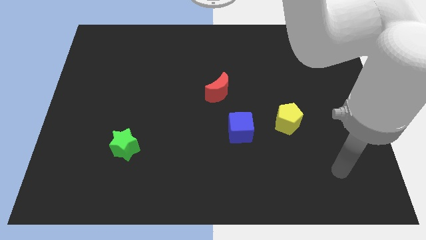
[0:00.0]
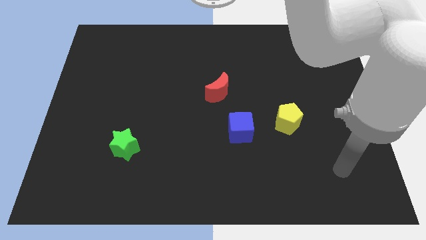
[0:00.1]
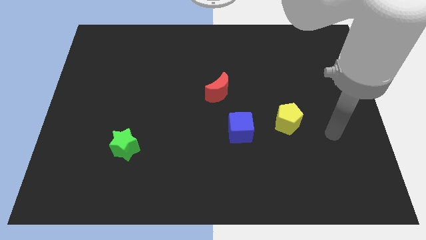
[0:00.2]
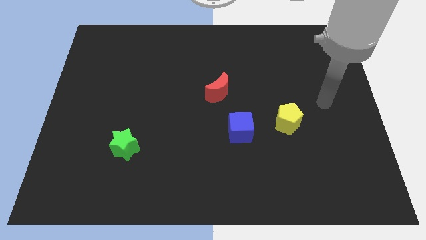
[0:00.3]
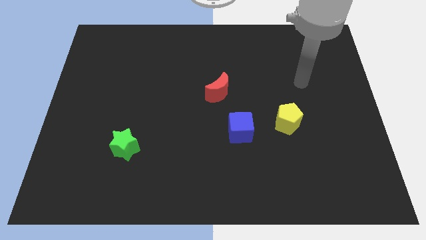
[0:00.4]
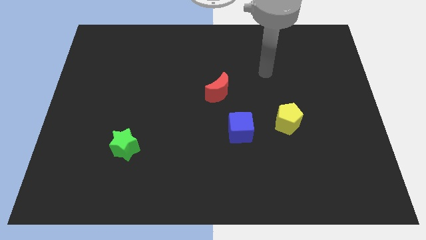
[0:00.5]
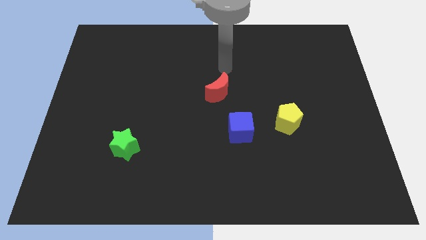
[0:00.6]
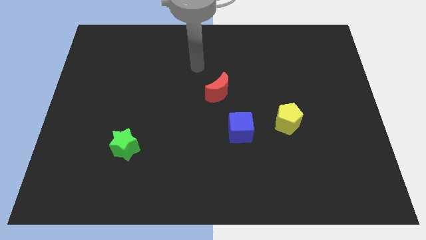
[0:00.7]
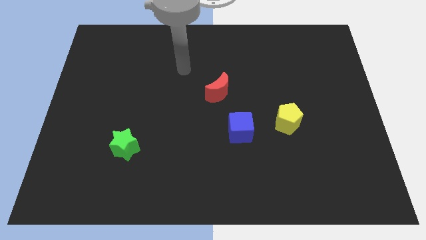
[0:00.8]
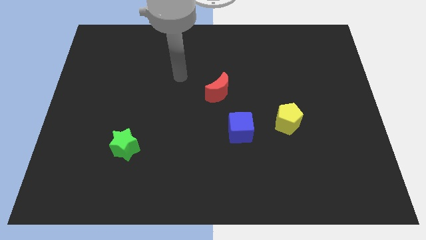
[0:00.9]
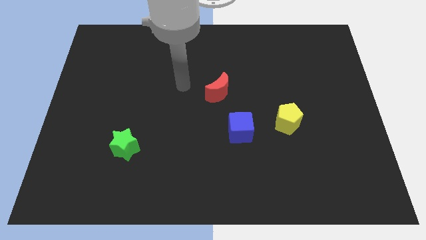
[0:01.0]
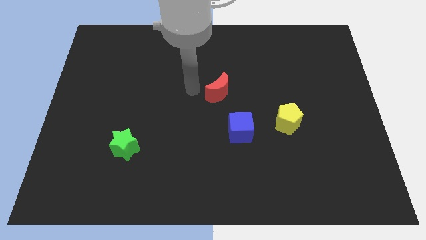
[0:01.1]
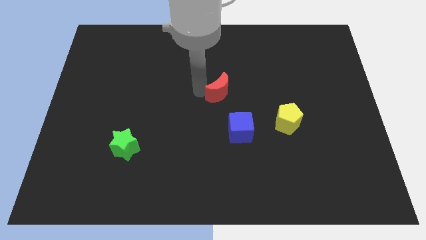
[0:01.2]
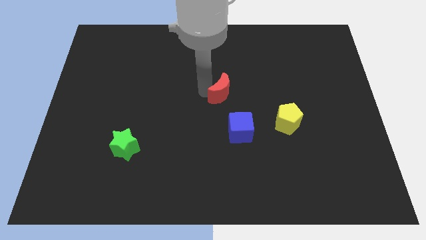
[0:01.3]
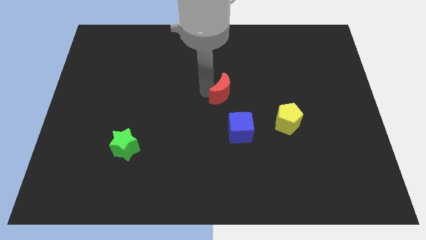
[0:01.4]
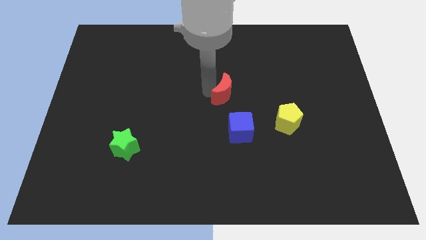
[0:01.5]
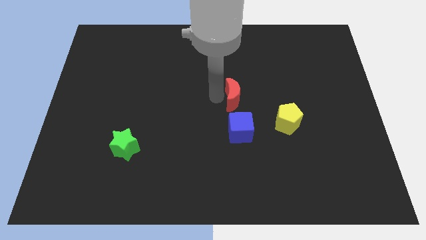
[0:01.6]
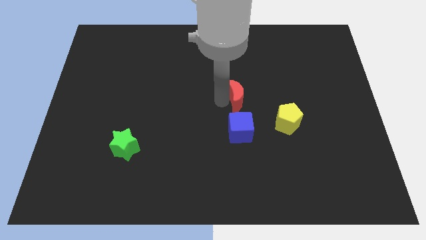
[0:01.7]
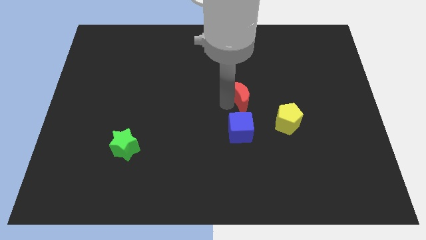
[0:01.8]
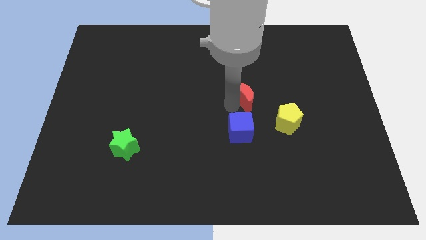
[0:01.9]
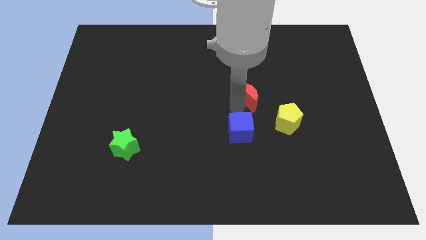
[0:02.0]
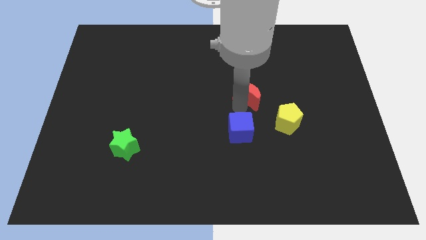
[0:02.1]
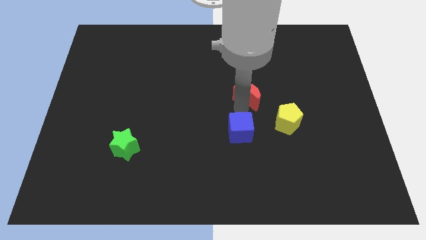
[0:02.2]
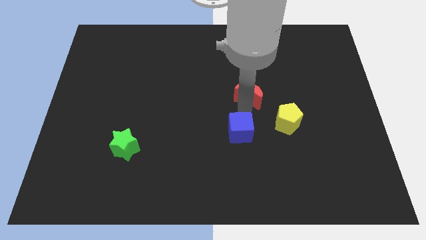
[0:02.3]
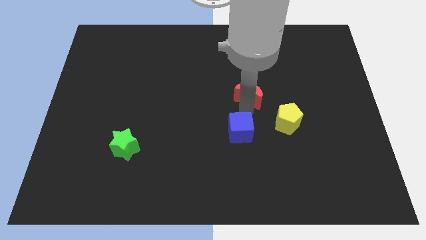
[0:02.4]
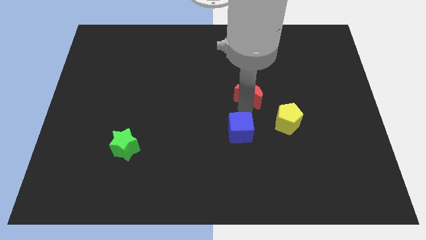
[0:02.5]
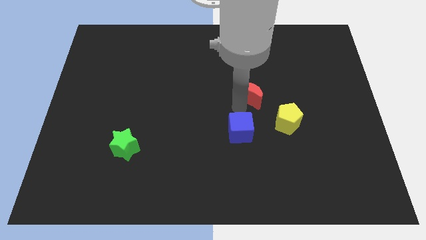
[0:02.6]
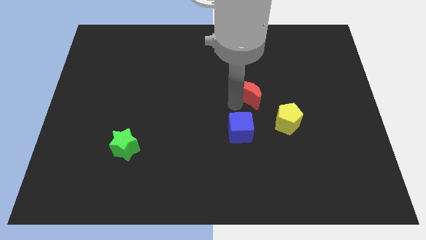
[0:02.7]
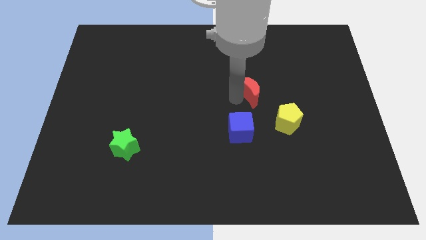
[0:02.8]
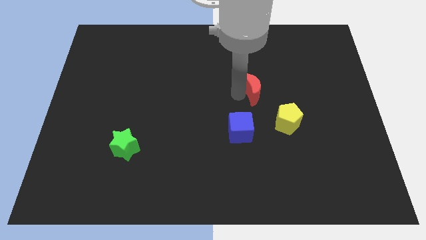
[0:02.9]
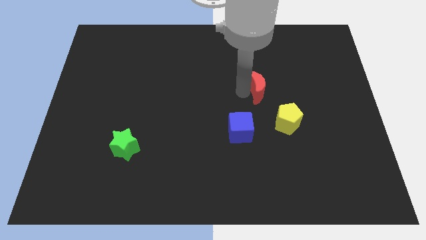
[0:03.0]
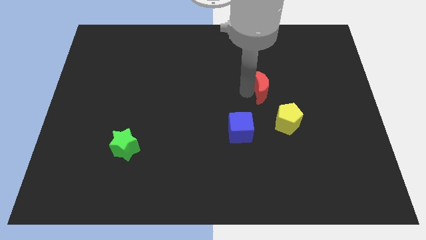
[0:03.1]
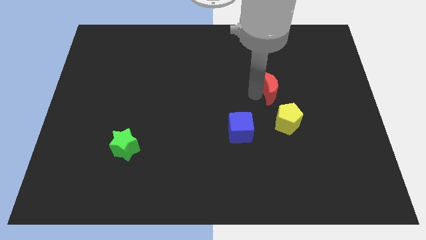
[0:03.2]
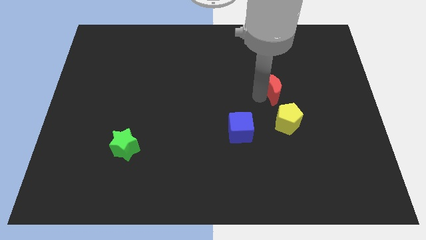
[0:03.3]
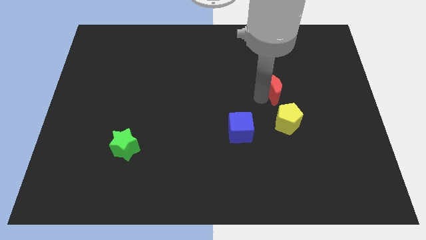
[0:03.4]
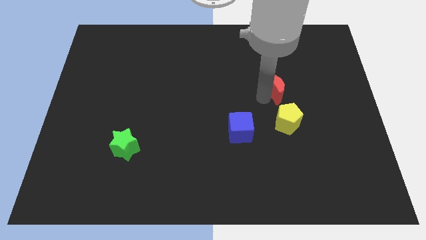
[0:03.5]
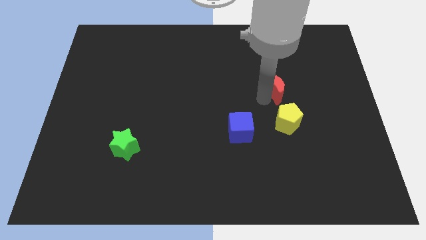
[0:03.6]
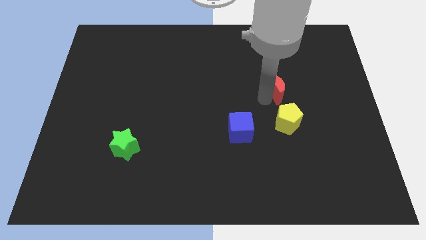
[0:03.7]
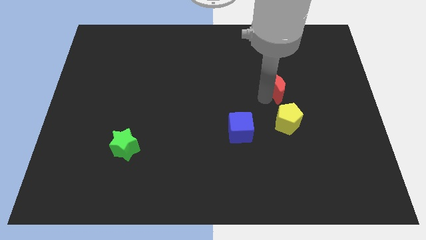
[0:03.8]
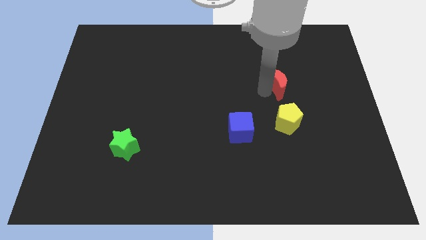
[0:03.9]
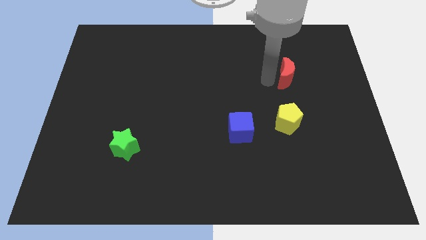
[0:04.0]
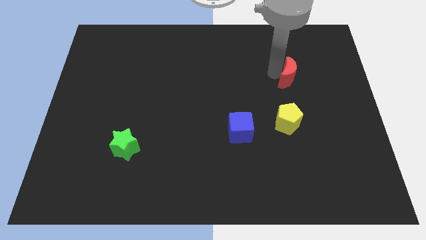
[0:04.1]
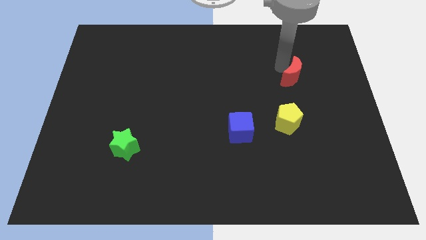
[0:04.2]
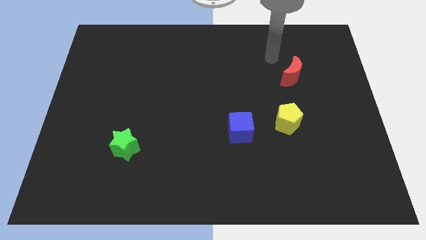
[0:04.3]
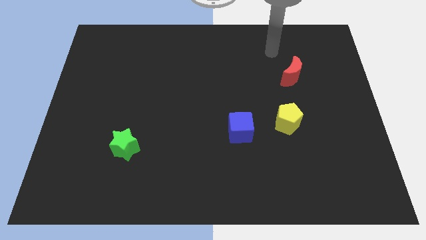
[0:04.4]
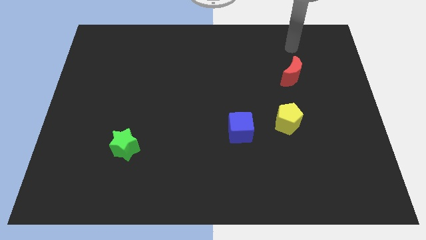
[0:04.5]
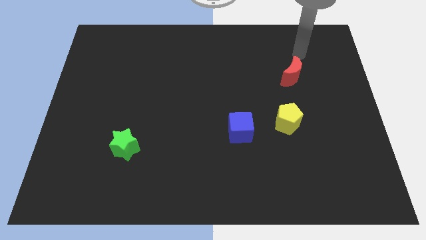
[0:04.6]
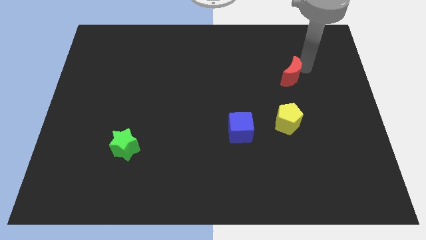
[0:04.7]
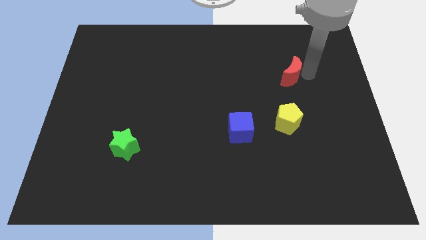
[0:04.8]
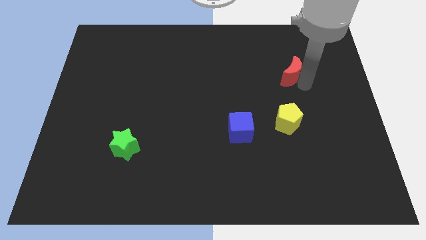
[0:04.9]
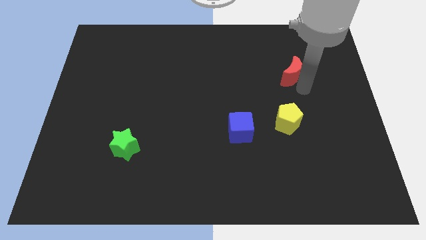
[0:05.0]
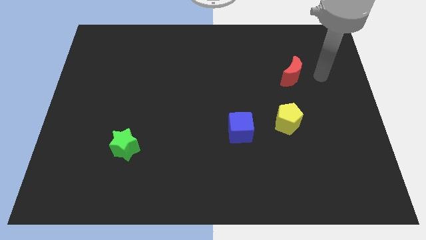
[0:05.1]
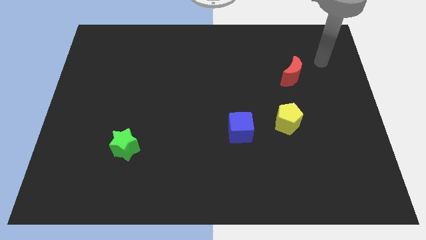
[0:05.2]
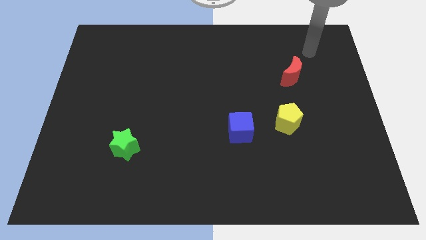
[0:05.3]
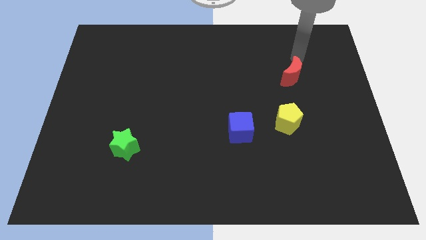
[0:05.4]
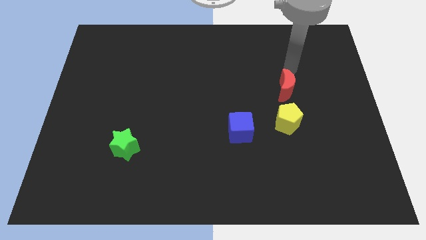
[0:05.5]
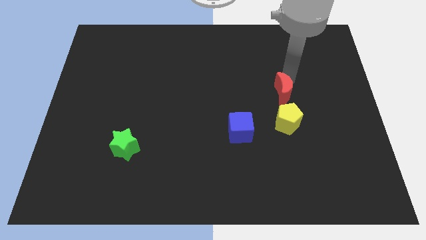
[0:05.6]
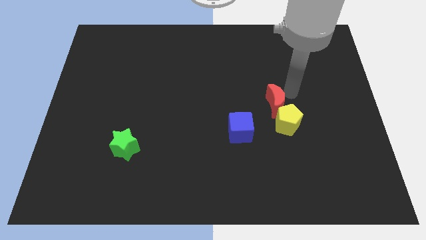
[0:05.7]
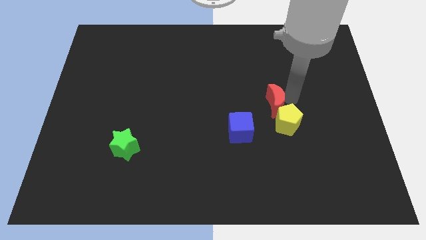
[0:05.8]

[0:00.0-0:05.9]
push the moon to the yellow pentagon

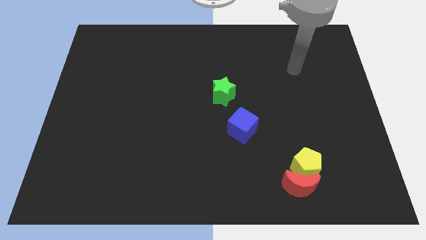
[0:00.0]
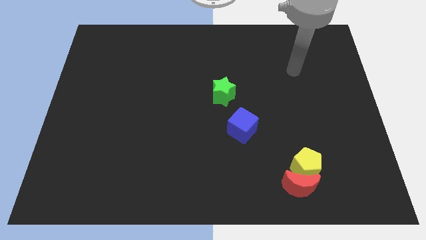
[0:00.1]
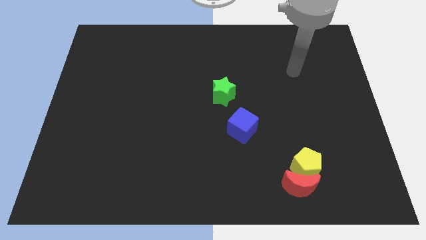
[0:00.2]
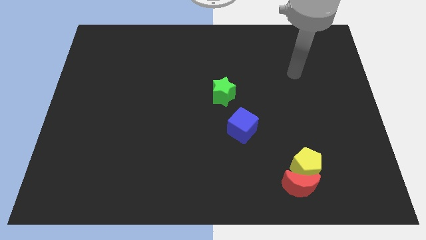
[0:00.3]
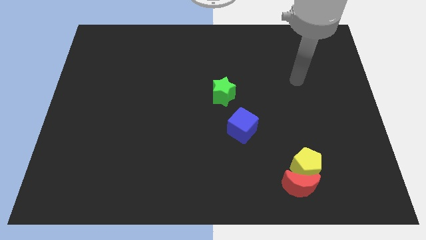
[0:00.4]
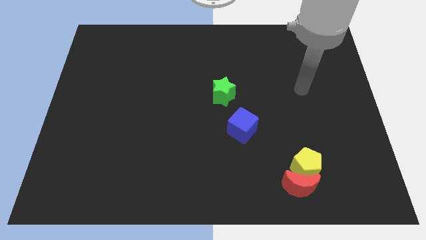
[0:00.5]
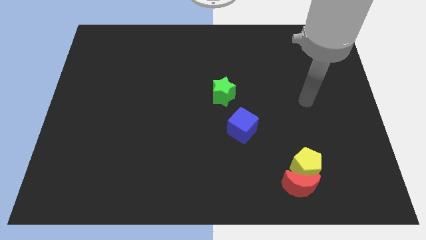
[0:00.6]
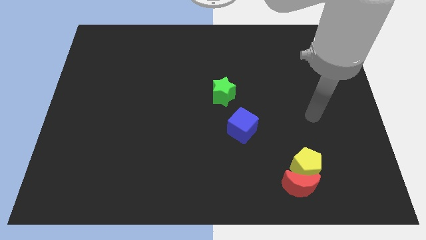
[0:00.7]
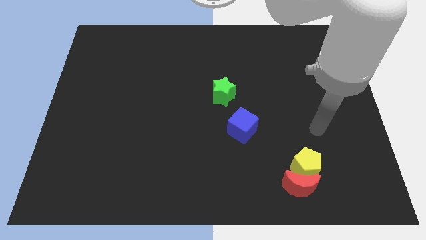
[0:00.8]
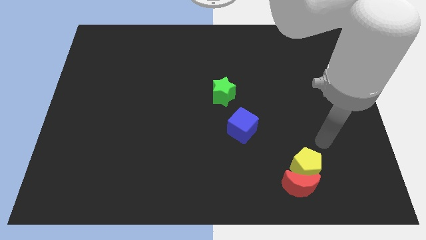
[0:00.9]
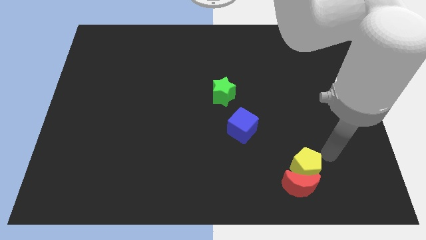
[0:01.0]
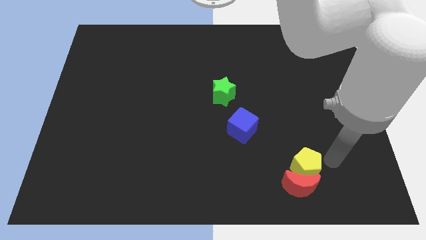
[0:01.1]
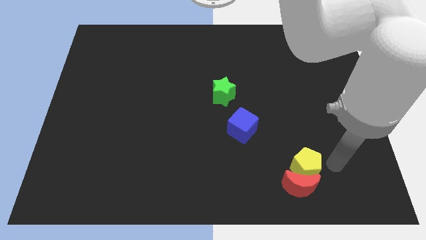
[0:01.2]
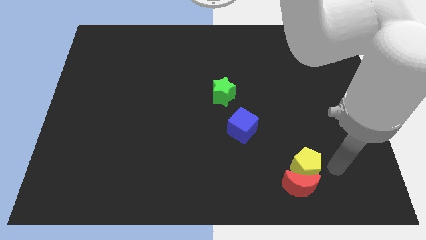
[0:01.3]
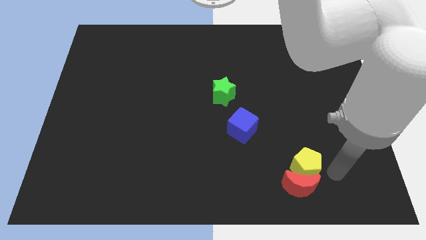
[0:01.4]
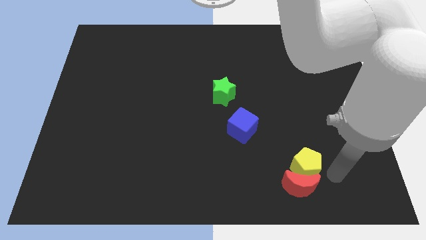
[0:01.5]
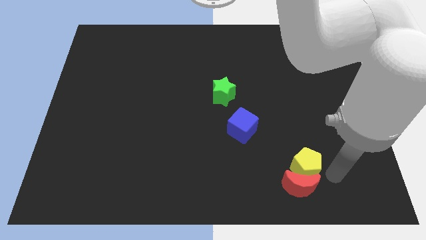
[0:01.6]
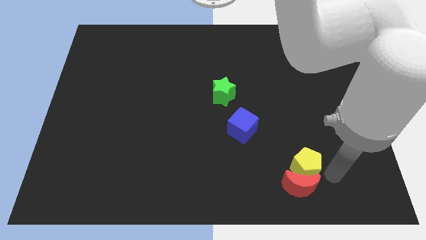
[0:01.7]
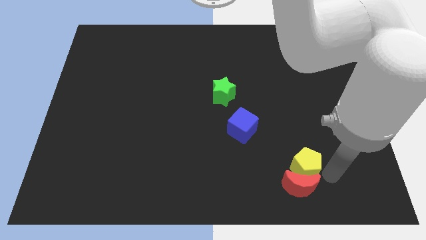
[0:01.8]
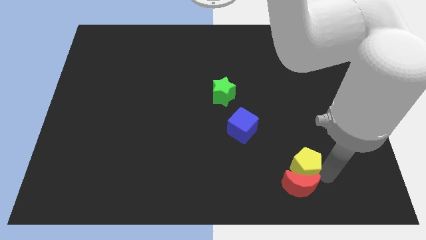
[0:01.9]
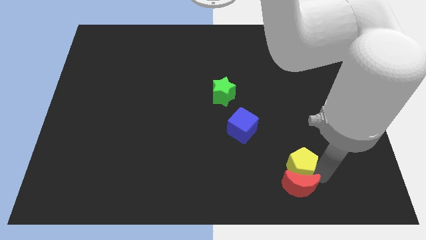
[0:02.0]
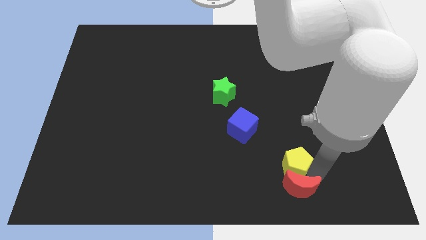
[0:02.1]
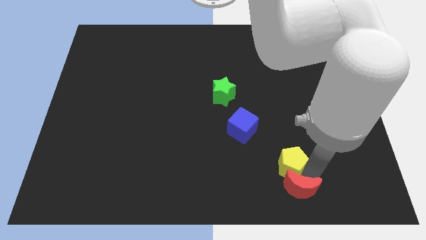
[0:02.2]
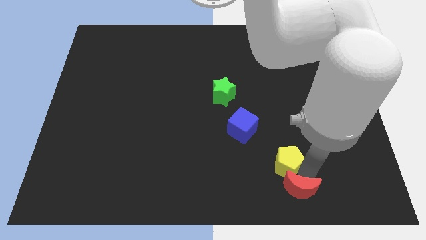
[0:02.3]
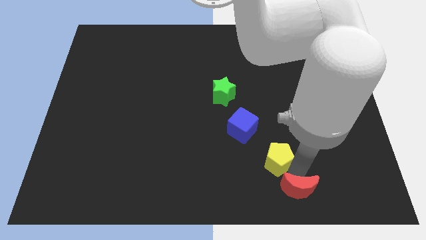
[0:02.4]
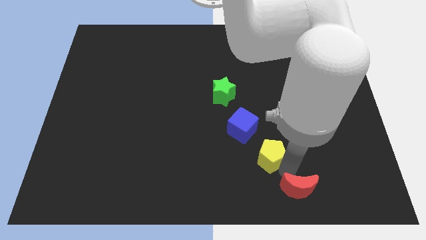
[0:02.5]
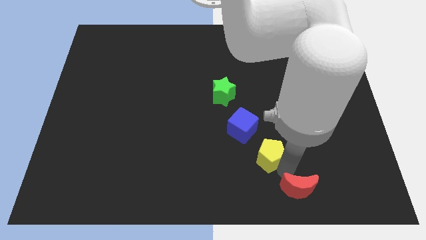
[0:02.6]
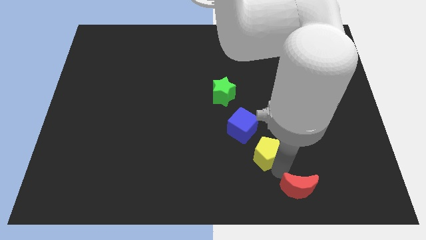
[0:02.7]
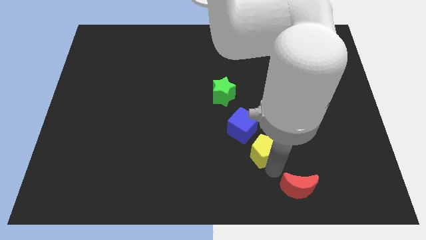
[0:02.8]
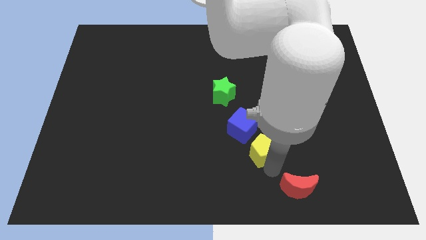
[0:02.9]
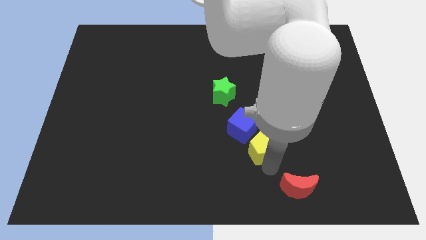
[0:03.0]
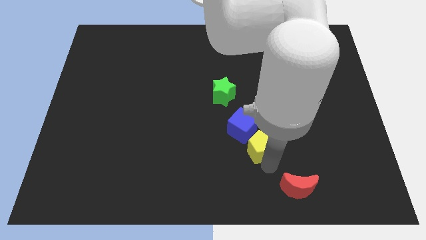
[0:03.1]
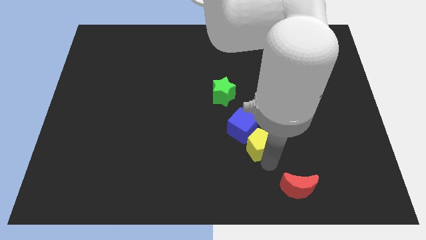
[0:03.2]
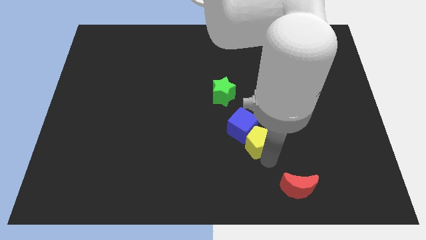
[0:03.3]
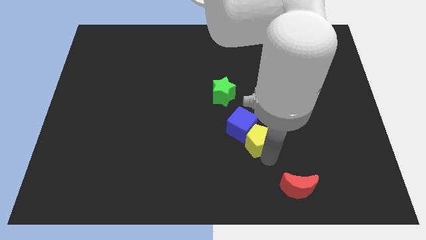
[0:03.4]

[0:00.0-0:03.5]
move the pentagon towards the cube
